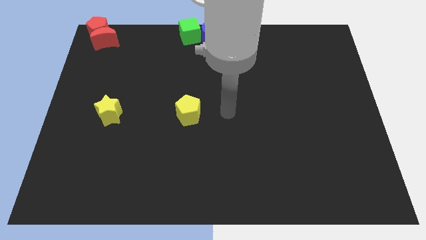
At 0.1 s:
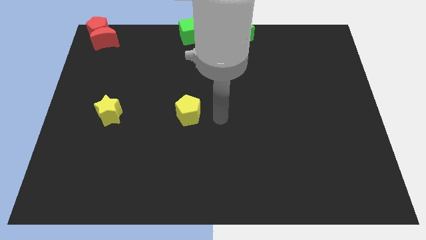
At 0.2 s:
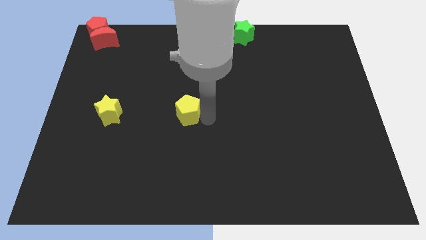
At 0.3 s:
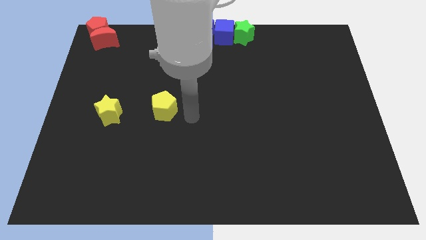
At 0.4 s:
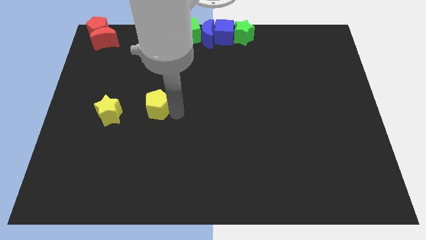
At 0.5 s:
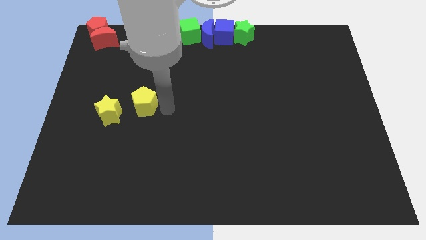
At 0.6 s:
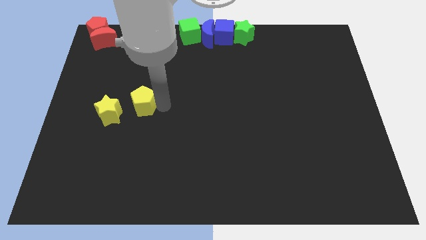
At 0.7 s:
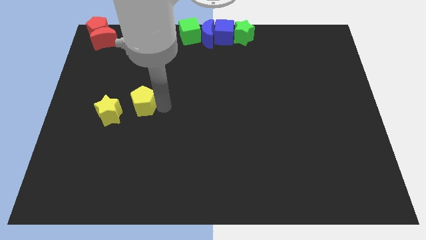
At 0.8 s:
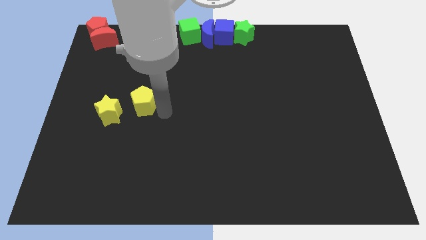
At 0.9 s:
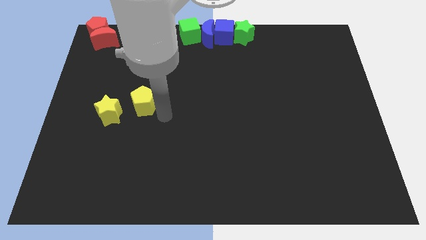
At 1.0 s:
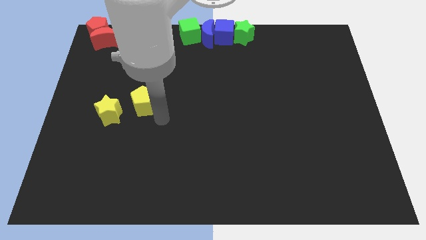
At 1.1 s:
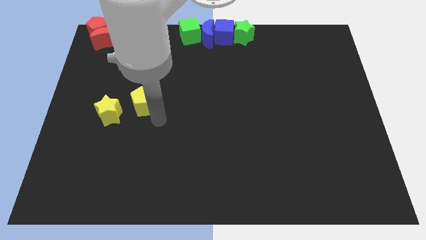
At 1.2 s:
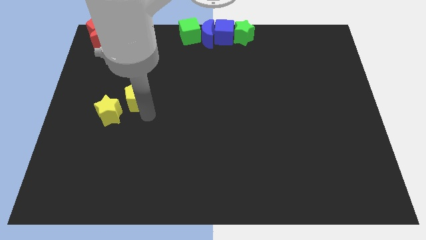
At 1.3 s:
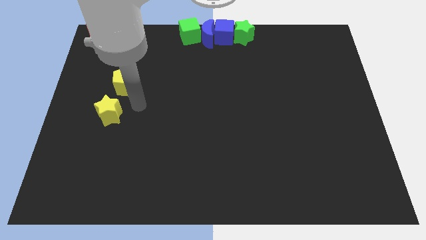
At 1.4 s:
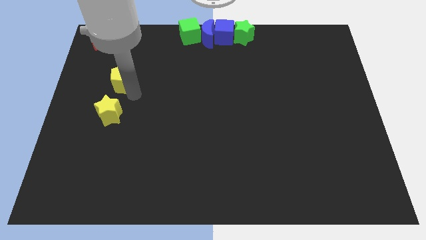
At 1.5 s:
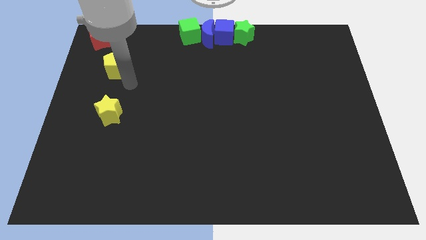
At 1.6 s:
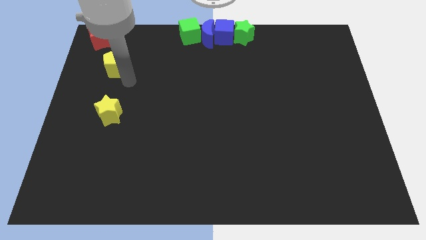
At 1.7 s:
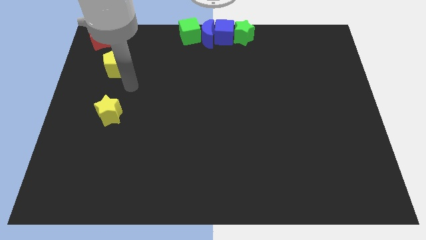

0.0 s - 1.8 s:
place the yellow pentagon below the red blocks

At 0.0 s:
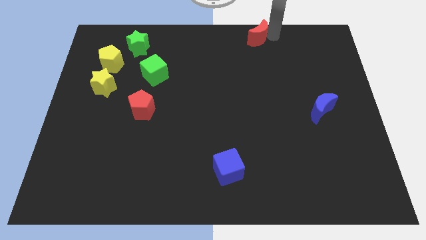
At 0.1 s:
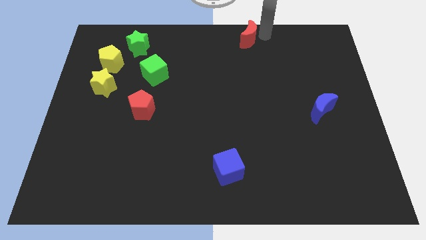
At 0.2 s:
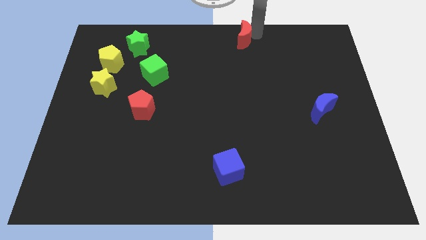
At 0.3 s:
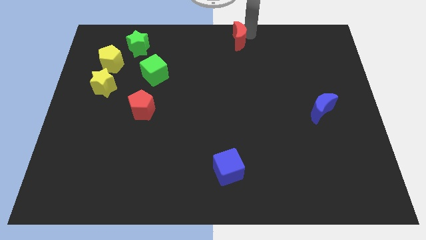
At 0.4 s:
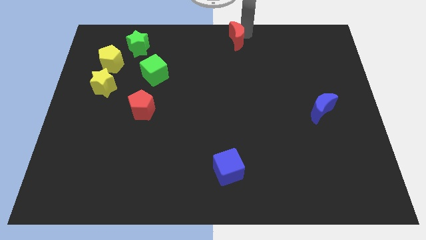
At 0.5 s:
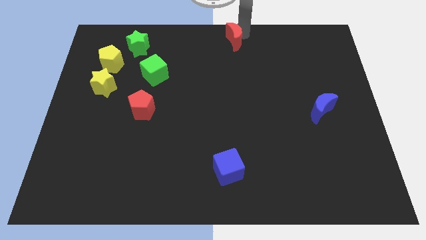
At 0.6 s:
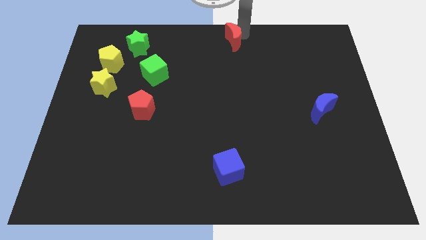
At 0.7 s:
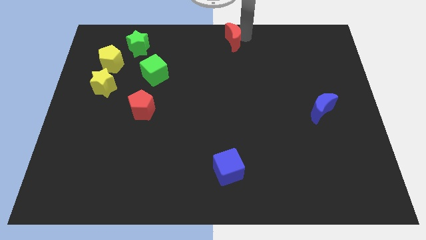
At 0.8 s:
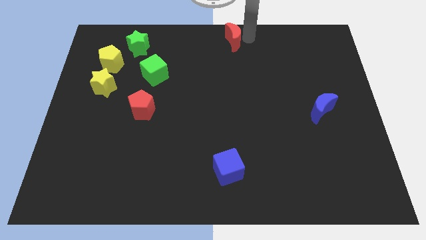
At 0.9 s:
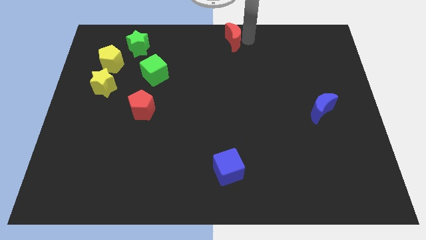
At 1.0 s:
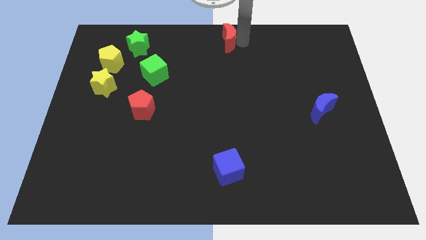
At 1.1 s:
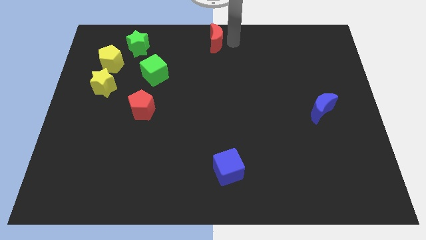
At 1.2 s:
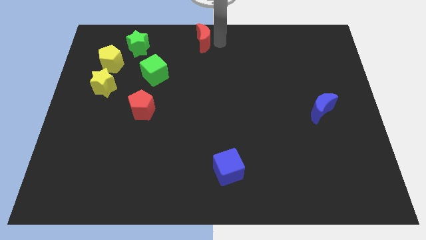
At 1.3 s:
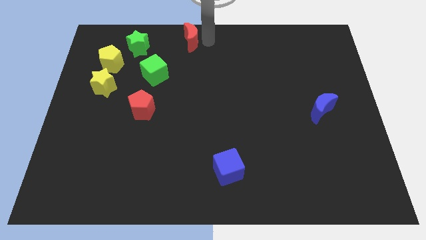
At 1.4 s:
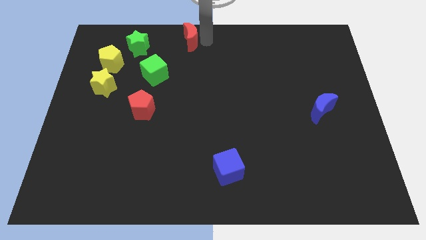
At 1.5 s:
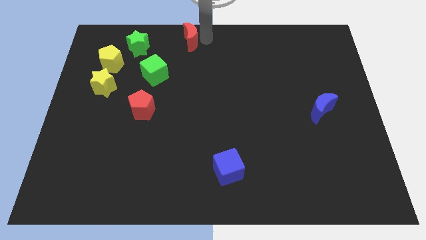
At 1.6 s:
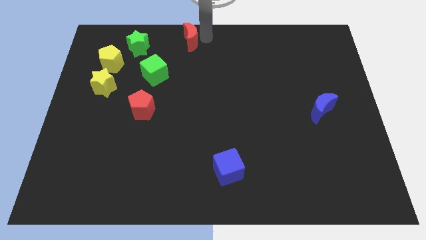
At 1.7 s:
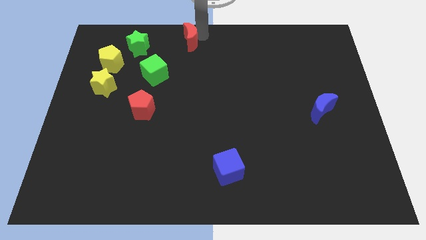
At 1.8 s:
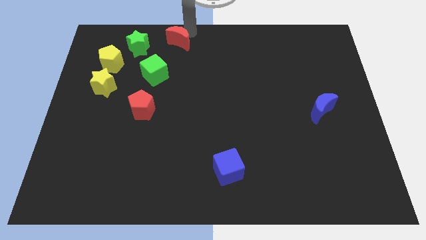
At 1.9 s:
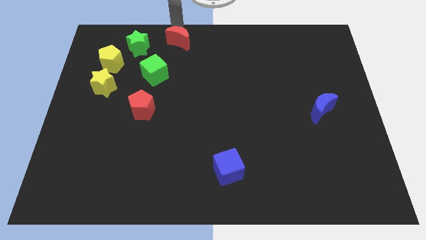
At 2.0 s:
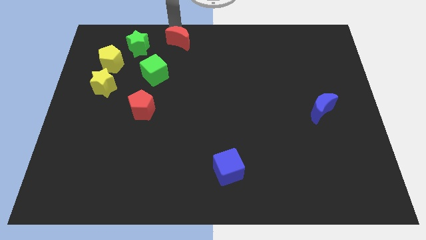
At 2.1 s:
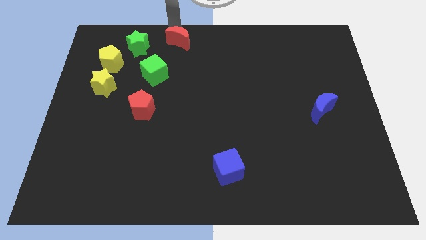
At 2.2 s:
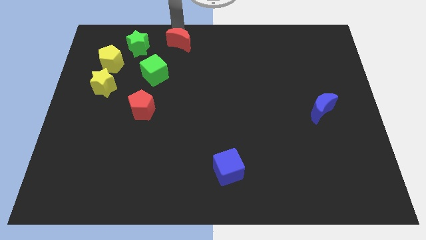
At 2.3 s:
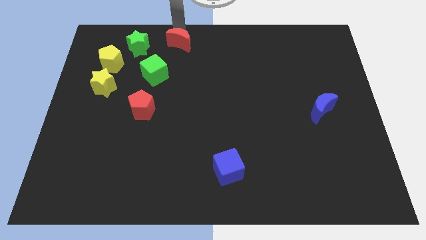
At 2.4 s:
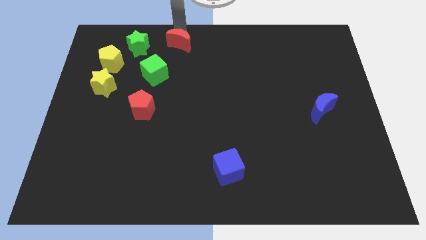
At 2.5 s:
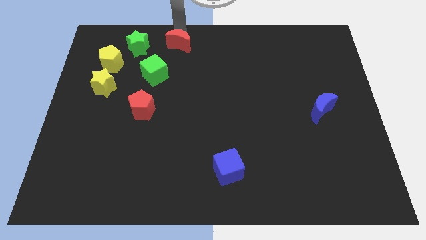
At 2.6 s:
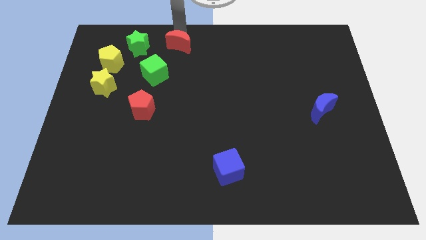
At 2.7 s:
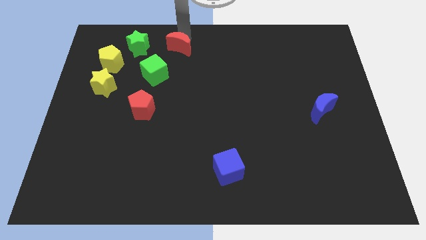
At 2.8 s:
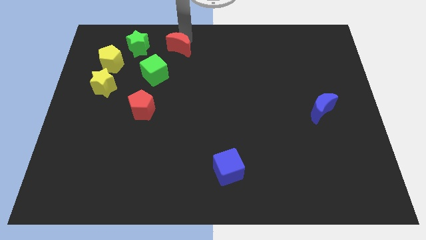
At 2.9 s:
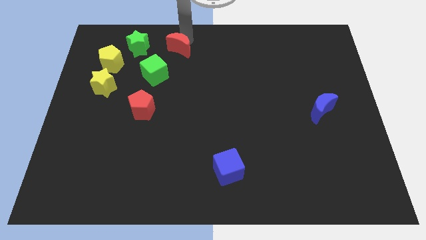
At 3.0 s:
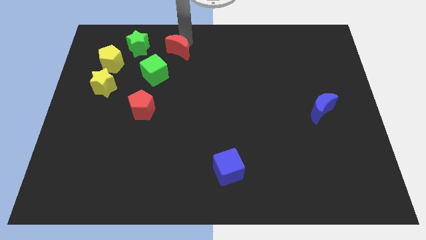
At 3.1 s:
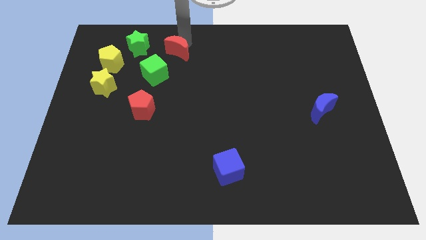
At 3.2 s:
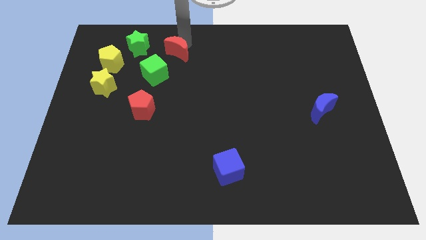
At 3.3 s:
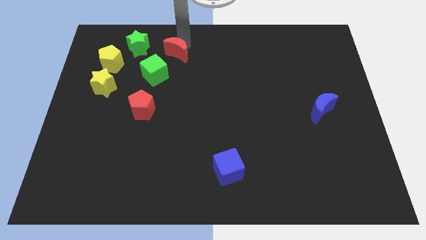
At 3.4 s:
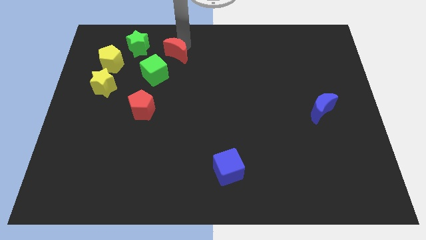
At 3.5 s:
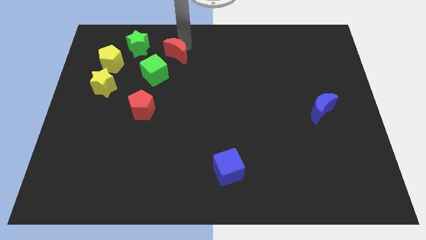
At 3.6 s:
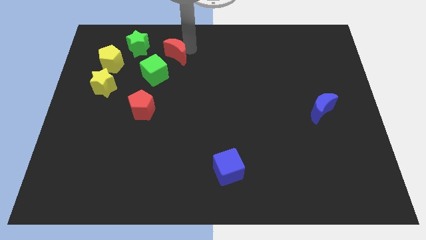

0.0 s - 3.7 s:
place the red crescent above the green cube

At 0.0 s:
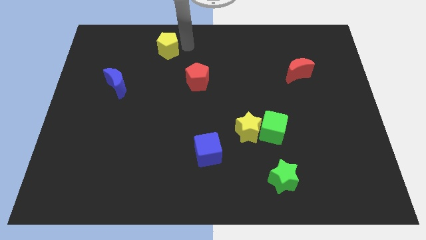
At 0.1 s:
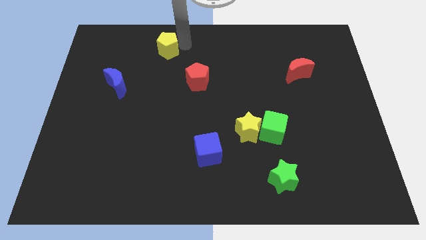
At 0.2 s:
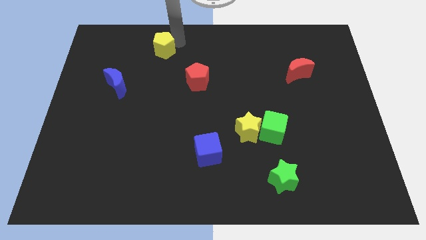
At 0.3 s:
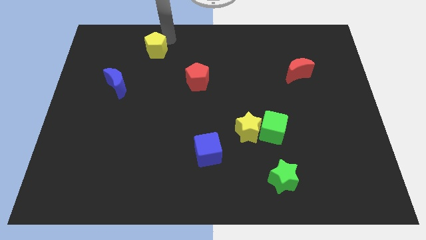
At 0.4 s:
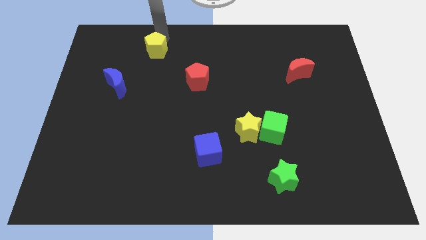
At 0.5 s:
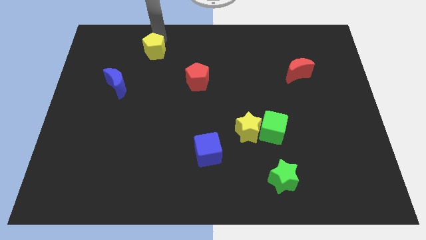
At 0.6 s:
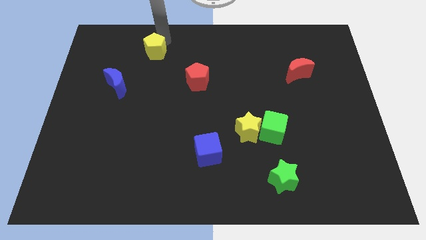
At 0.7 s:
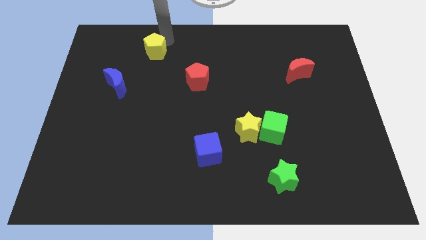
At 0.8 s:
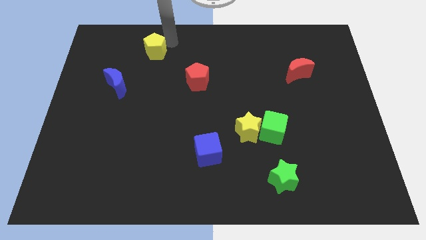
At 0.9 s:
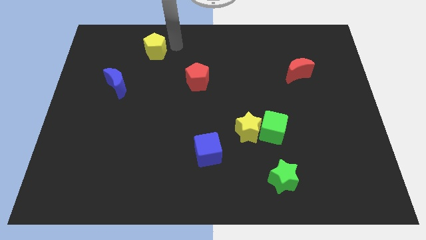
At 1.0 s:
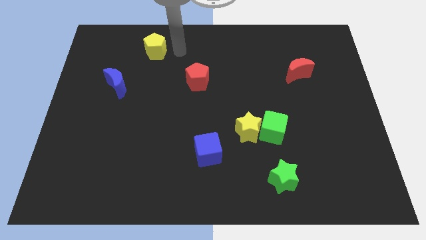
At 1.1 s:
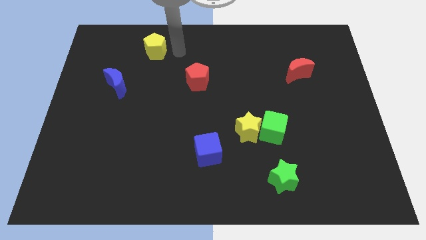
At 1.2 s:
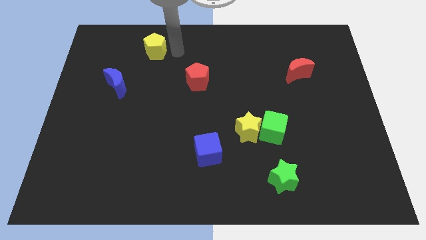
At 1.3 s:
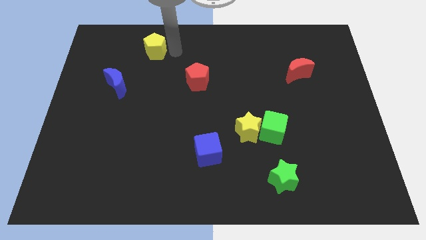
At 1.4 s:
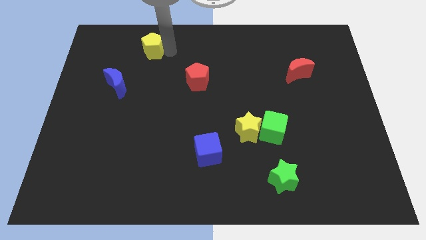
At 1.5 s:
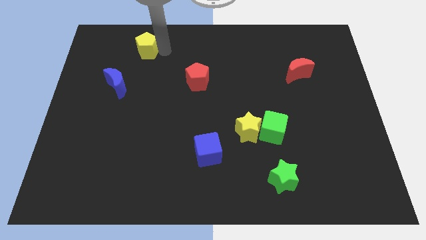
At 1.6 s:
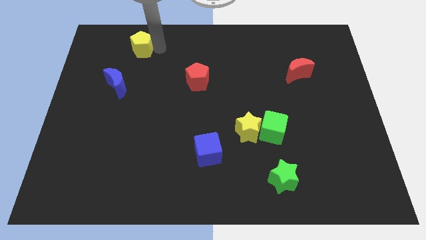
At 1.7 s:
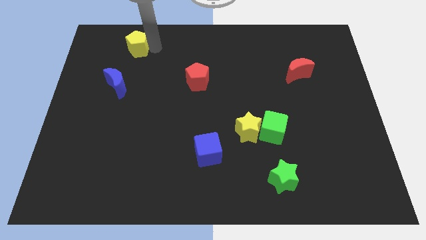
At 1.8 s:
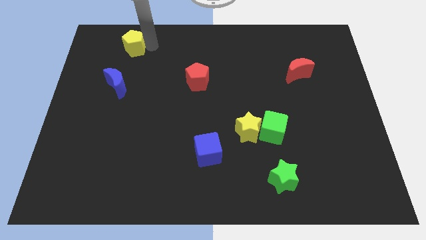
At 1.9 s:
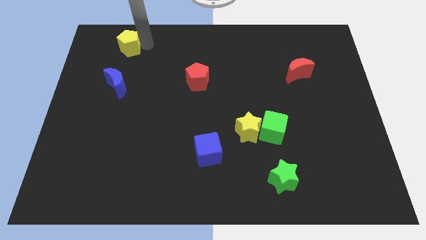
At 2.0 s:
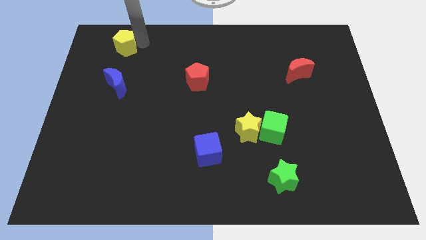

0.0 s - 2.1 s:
move the yellow pentagon above the blue moon

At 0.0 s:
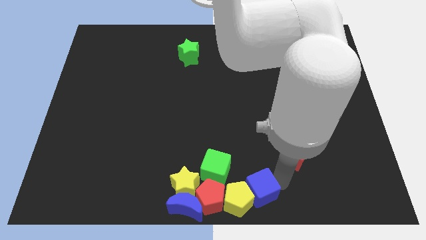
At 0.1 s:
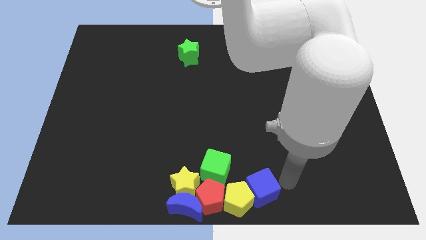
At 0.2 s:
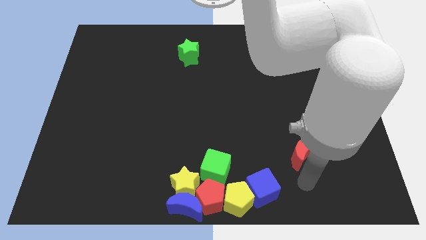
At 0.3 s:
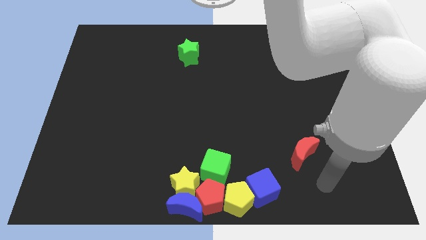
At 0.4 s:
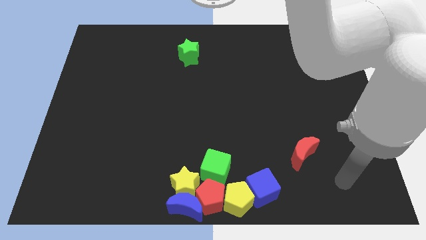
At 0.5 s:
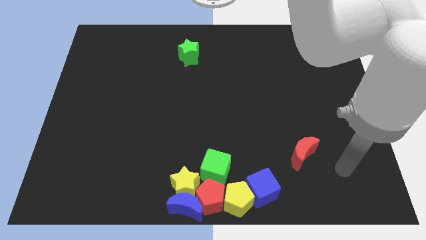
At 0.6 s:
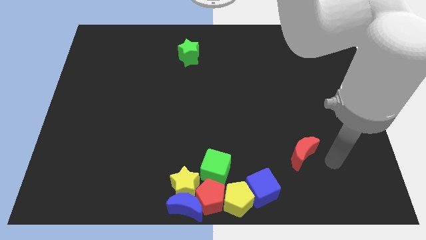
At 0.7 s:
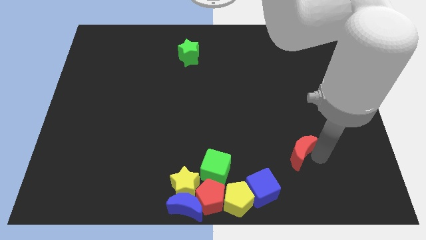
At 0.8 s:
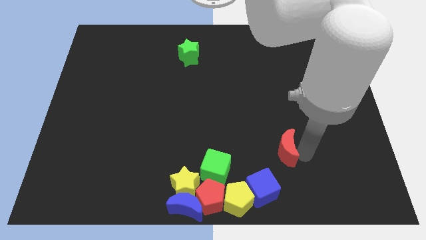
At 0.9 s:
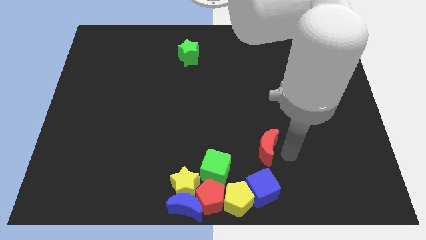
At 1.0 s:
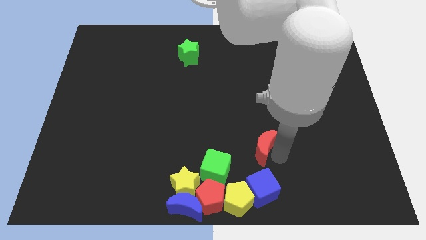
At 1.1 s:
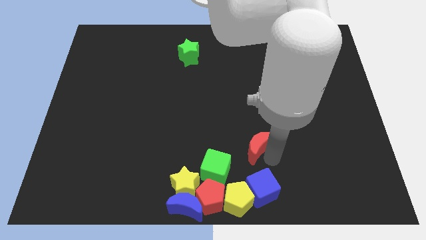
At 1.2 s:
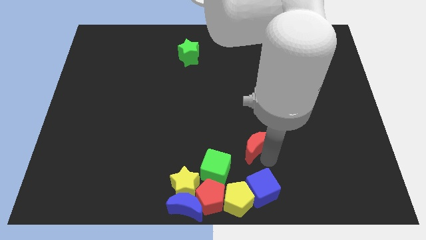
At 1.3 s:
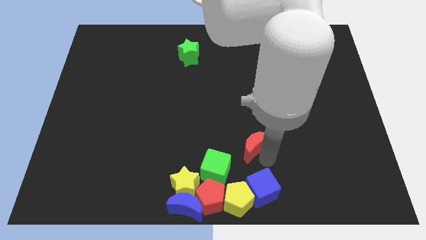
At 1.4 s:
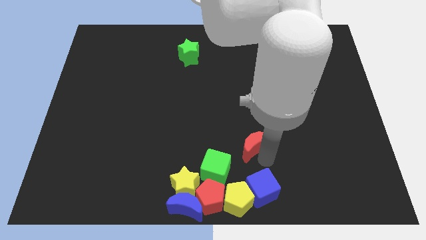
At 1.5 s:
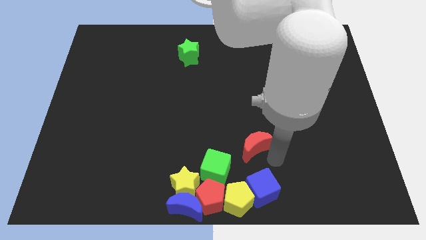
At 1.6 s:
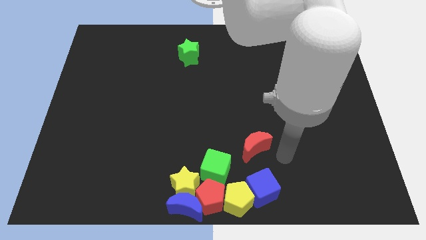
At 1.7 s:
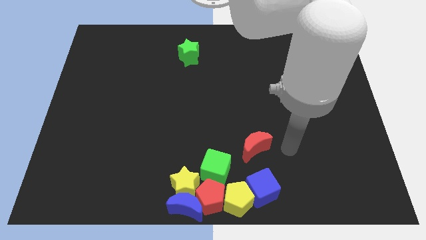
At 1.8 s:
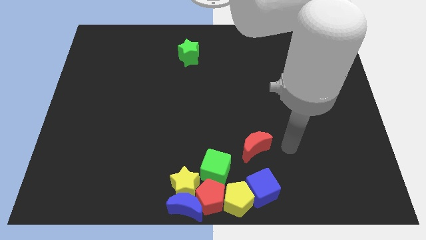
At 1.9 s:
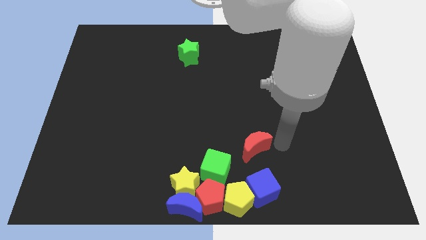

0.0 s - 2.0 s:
push the red crescent towards the green cube
